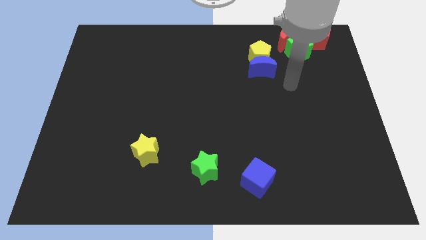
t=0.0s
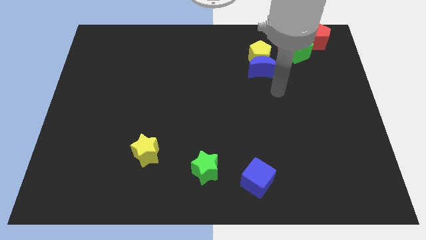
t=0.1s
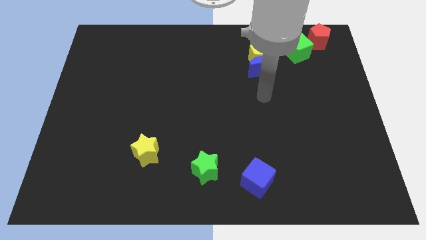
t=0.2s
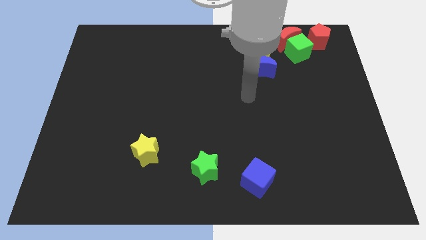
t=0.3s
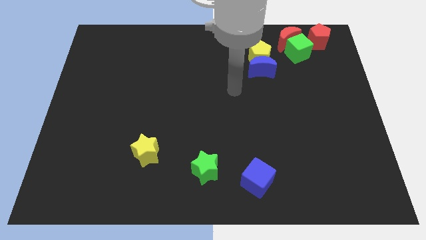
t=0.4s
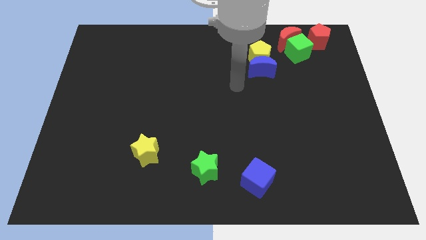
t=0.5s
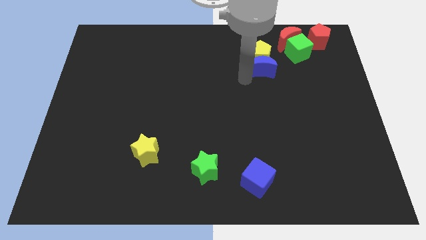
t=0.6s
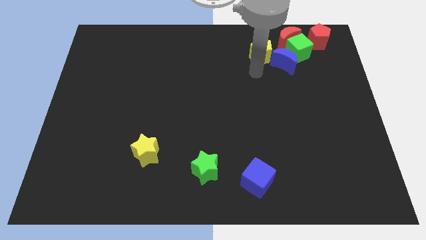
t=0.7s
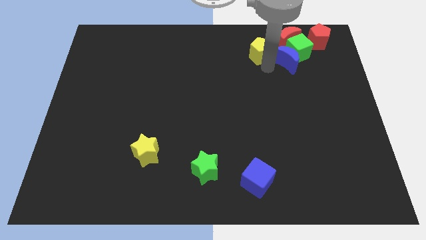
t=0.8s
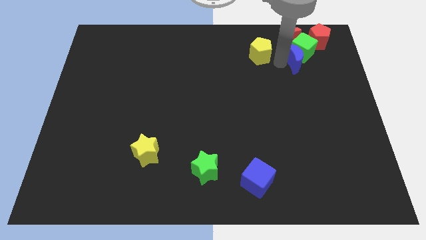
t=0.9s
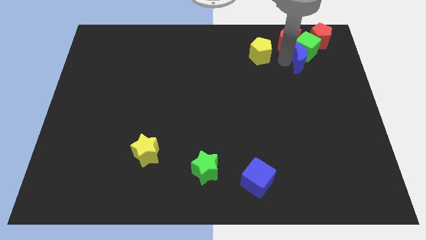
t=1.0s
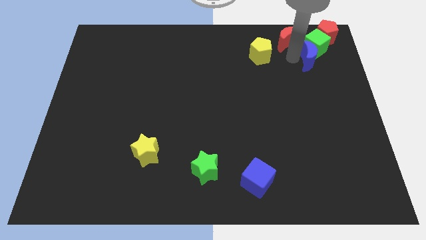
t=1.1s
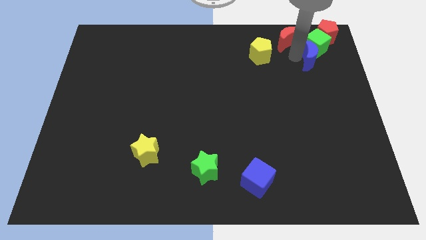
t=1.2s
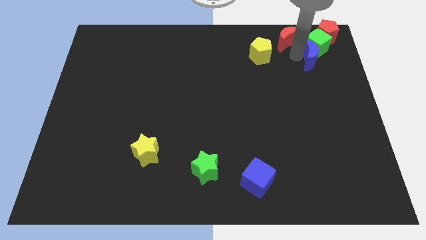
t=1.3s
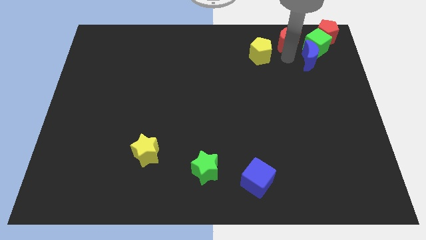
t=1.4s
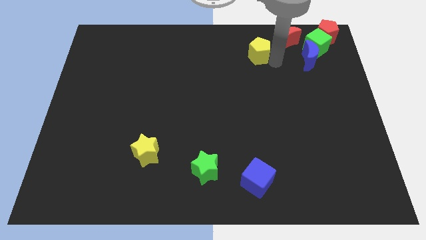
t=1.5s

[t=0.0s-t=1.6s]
push blue crescent into the green block

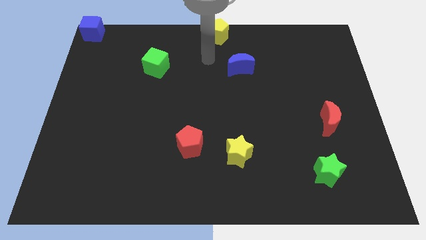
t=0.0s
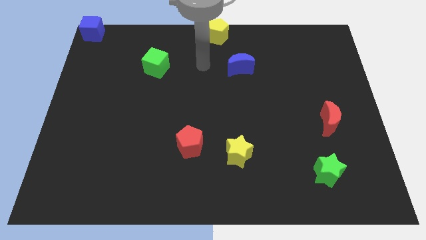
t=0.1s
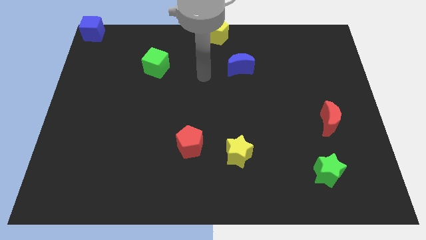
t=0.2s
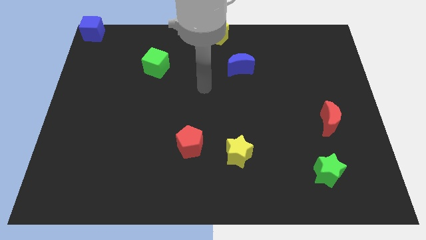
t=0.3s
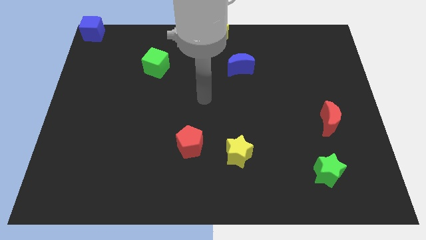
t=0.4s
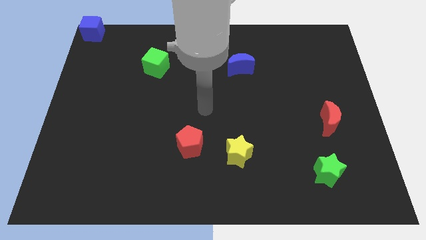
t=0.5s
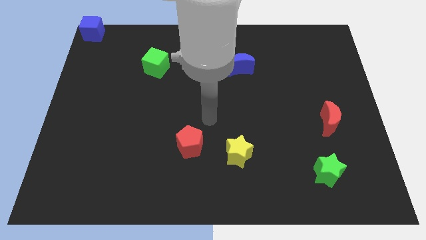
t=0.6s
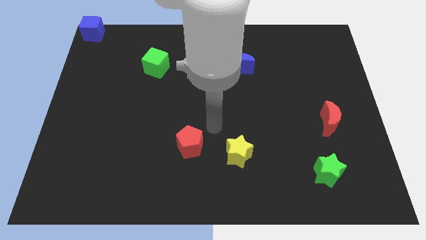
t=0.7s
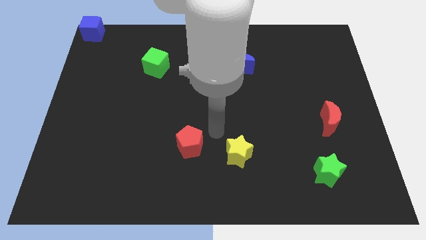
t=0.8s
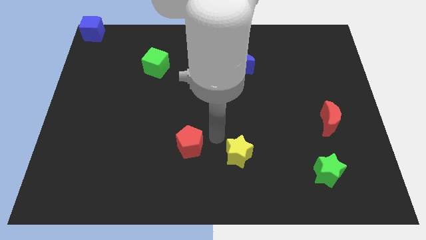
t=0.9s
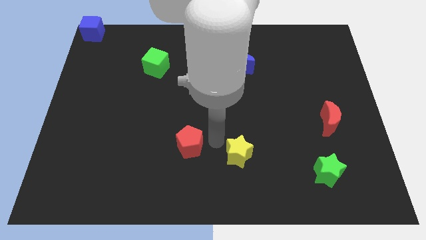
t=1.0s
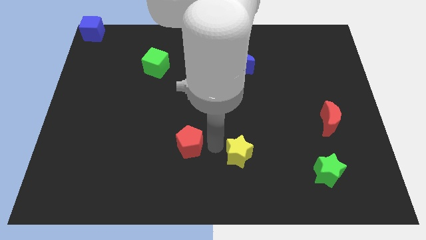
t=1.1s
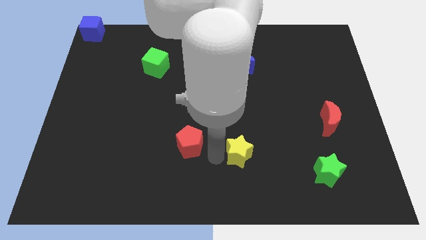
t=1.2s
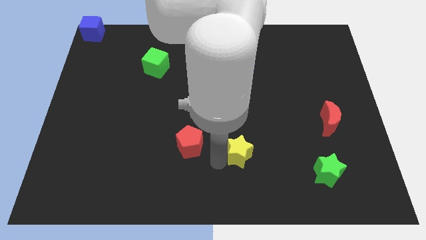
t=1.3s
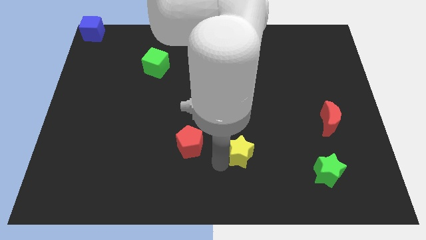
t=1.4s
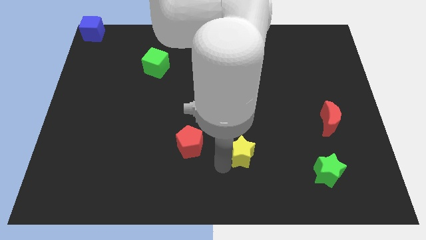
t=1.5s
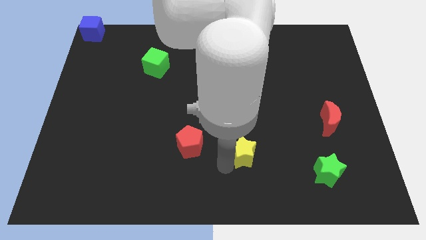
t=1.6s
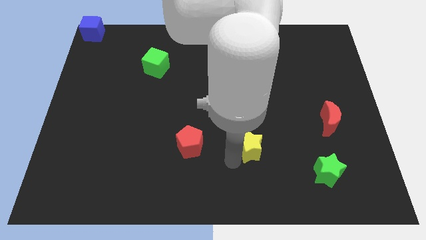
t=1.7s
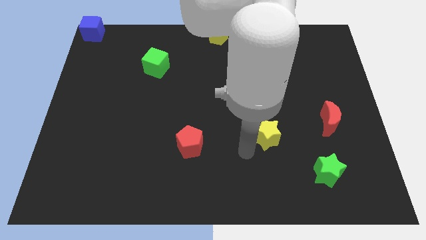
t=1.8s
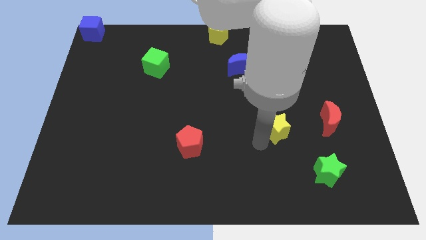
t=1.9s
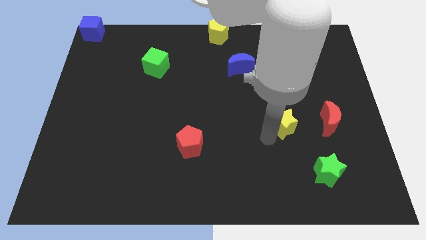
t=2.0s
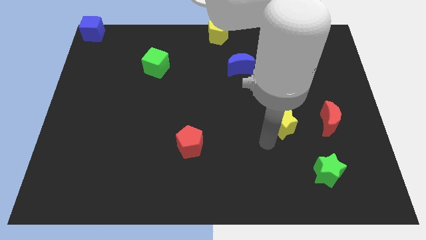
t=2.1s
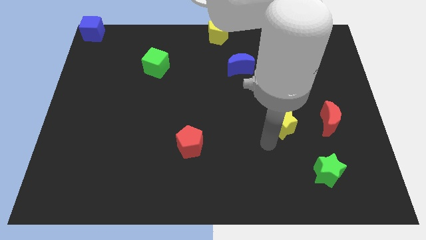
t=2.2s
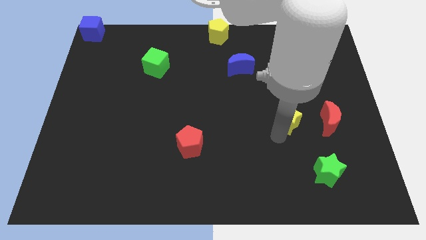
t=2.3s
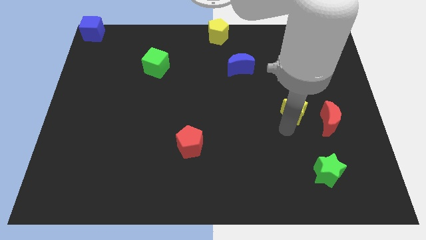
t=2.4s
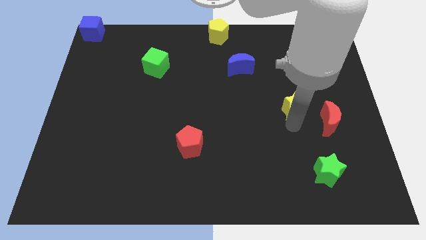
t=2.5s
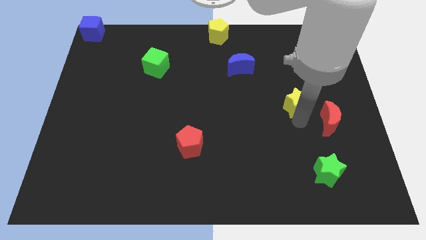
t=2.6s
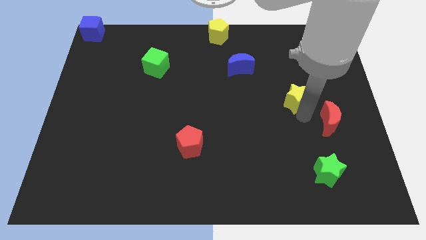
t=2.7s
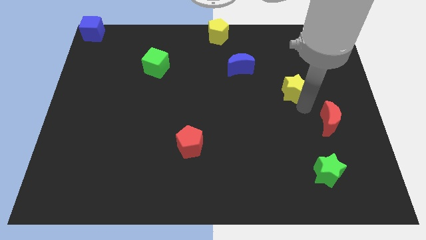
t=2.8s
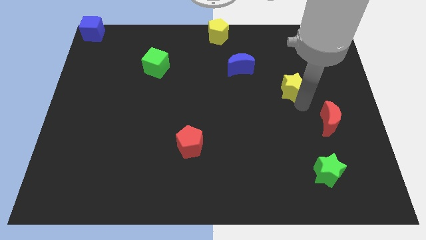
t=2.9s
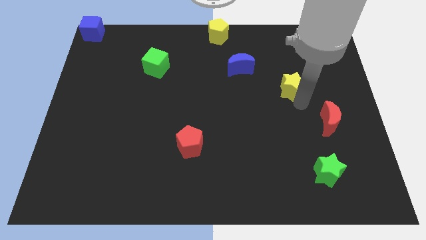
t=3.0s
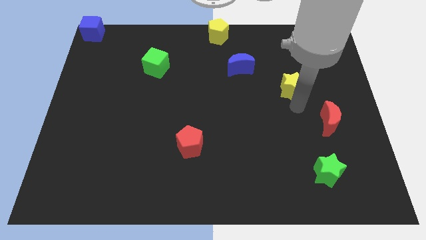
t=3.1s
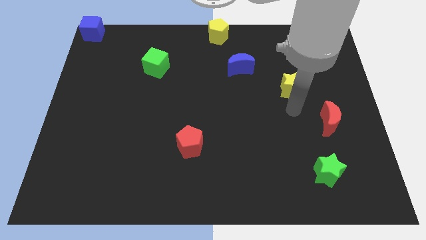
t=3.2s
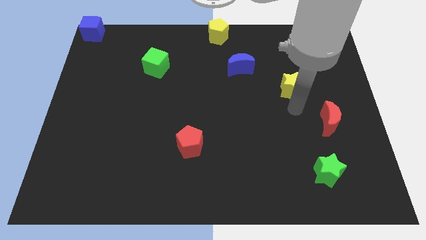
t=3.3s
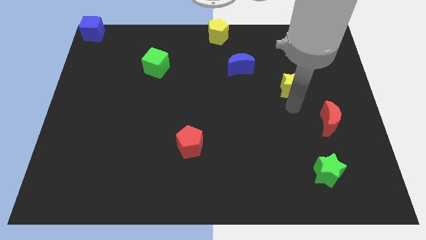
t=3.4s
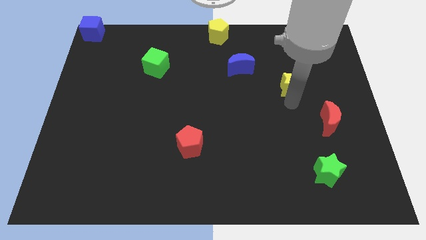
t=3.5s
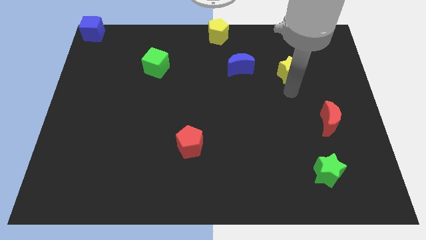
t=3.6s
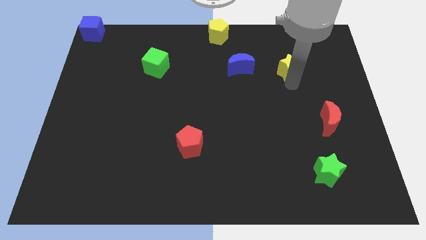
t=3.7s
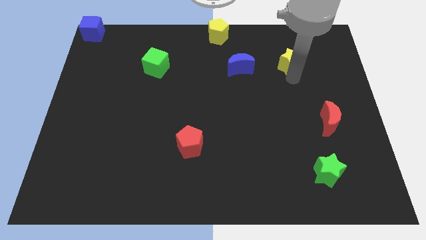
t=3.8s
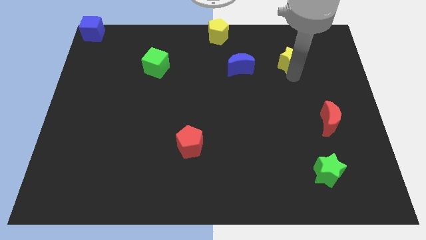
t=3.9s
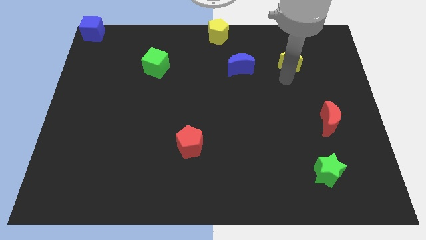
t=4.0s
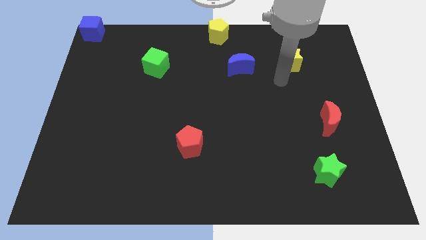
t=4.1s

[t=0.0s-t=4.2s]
place the yellow star right to the blue moon

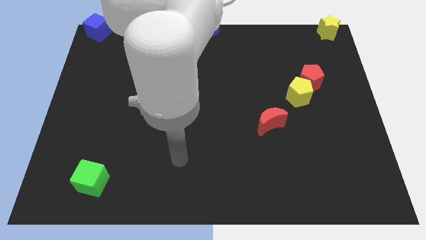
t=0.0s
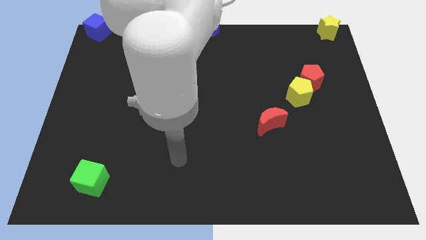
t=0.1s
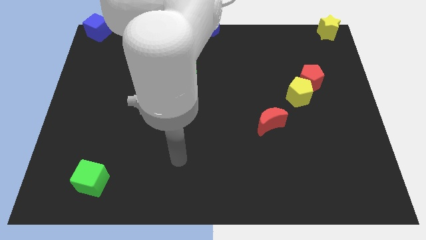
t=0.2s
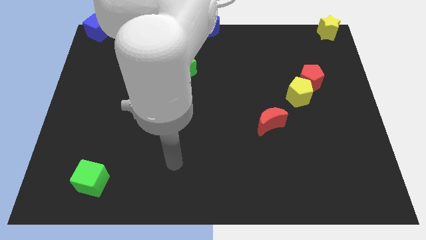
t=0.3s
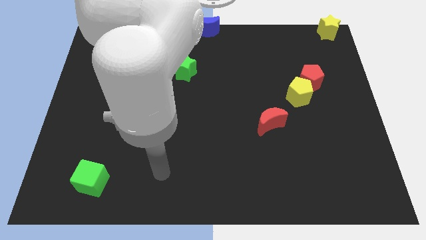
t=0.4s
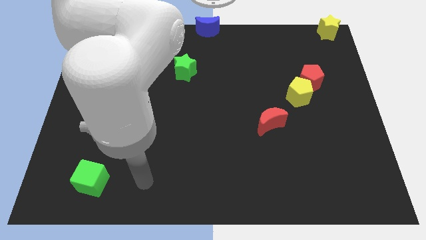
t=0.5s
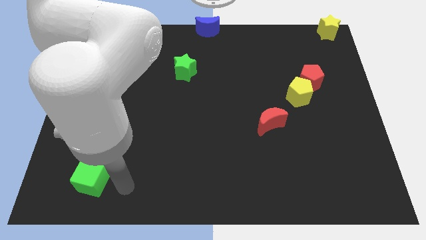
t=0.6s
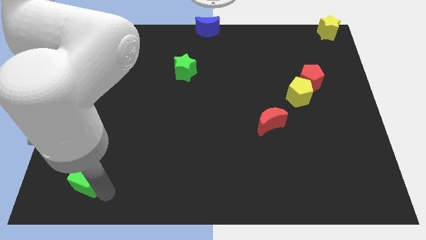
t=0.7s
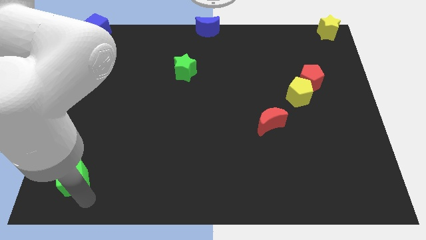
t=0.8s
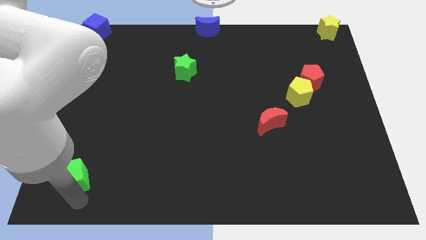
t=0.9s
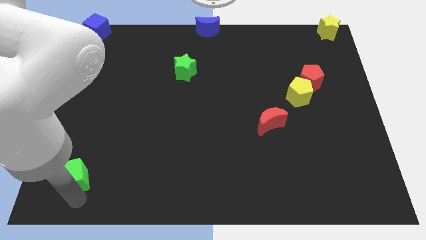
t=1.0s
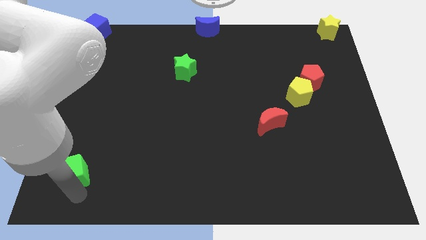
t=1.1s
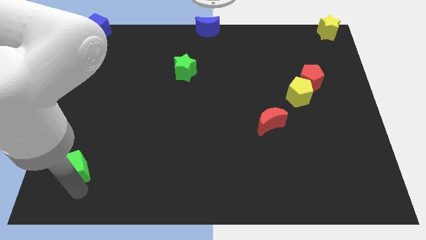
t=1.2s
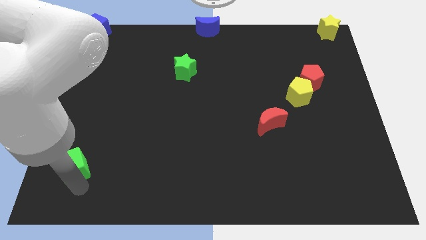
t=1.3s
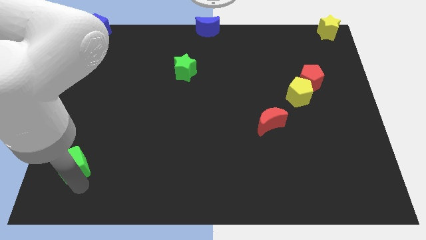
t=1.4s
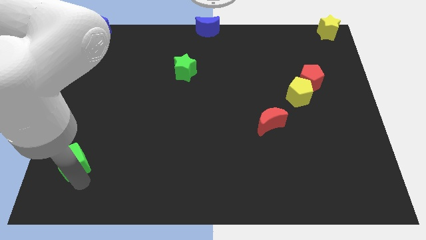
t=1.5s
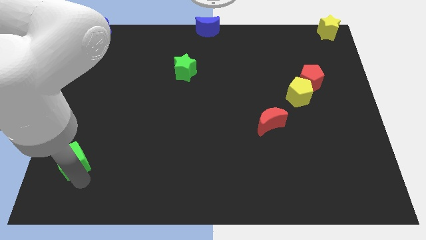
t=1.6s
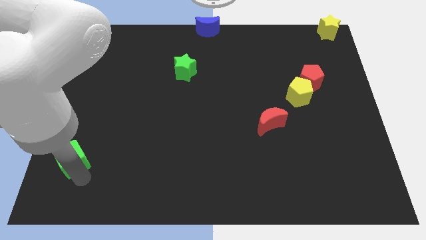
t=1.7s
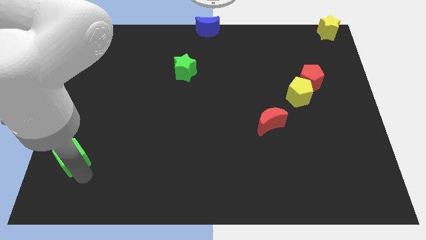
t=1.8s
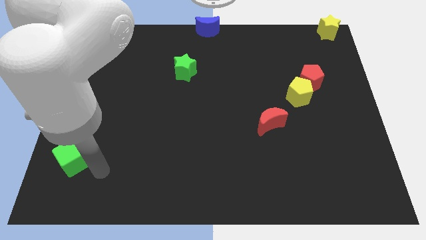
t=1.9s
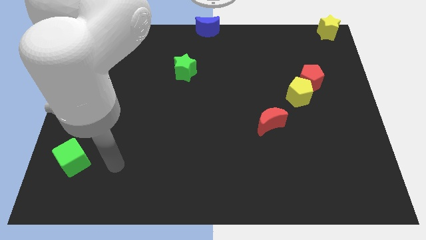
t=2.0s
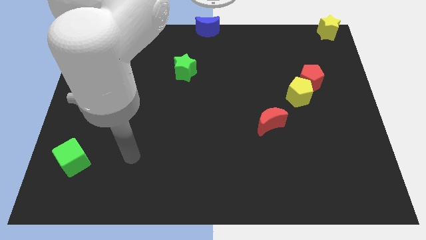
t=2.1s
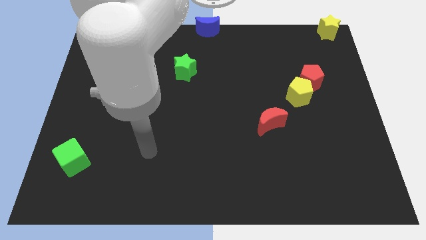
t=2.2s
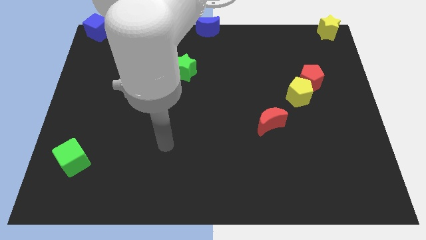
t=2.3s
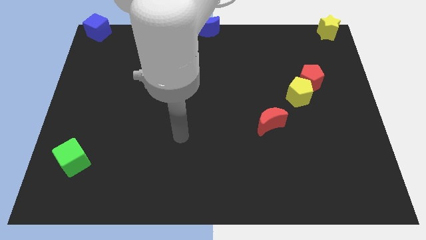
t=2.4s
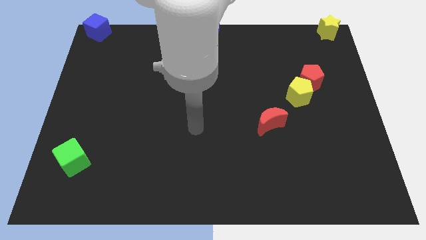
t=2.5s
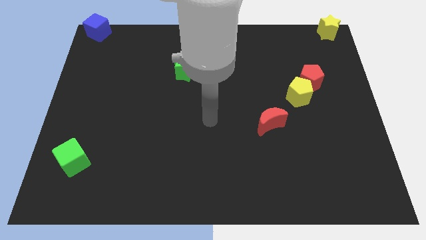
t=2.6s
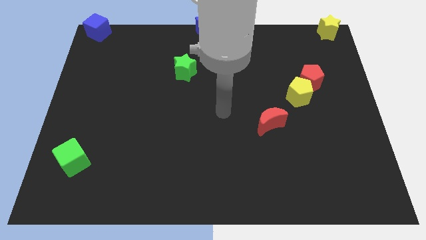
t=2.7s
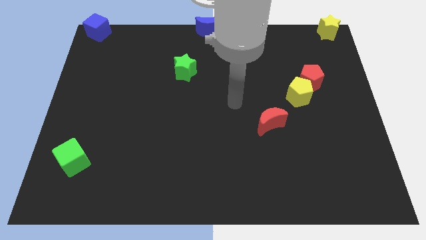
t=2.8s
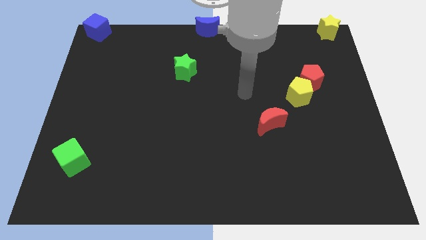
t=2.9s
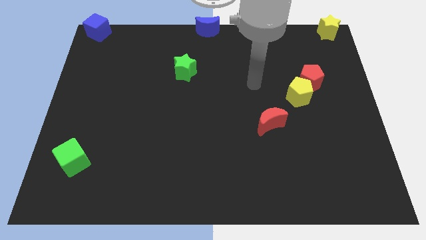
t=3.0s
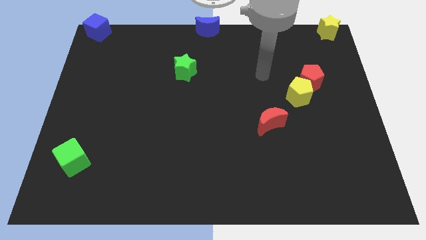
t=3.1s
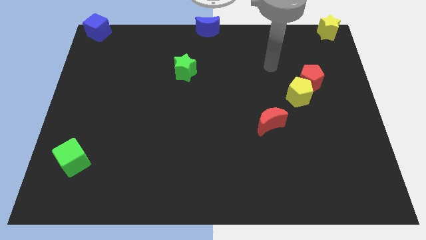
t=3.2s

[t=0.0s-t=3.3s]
push the green cube slightly to the top side of the board
